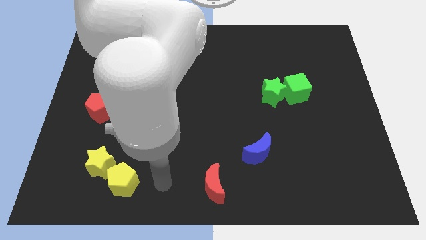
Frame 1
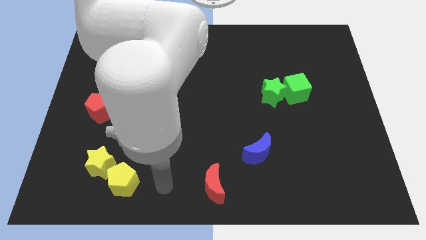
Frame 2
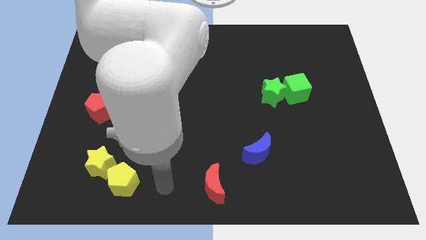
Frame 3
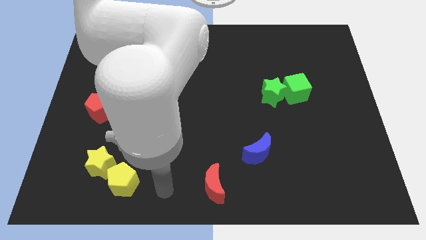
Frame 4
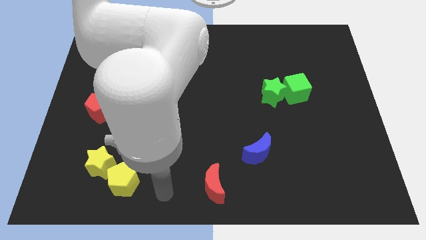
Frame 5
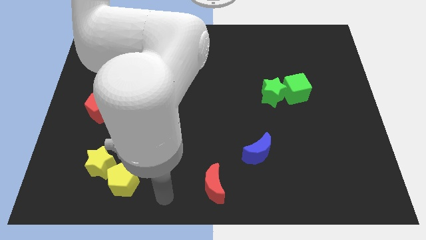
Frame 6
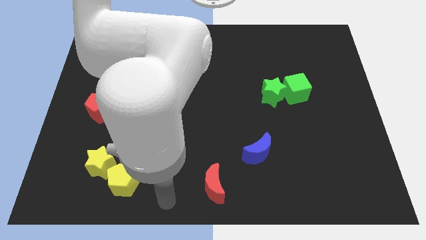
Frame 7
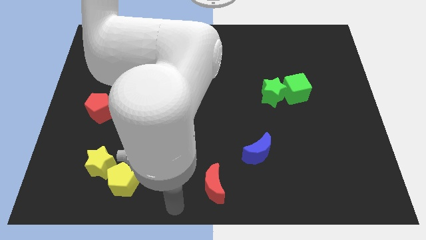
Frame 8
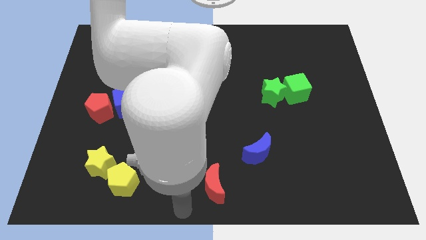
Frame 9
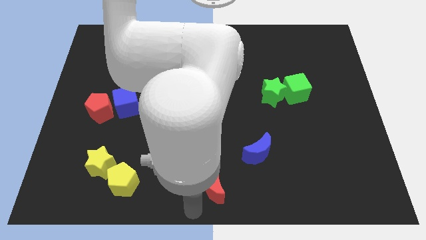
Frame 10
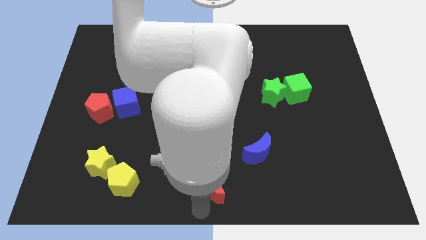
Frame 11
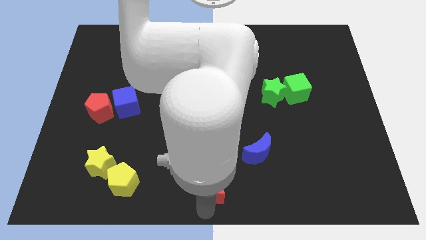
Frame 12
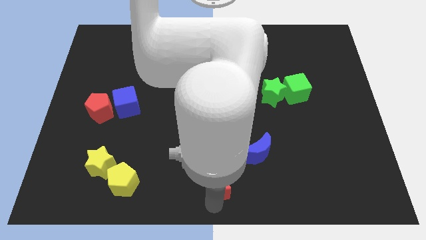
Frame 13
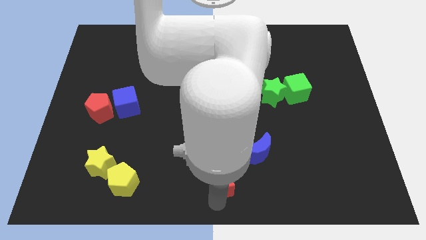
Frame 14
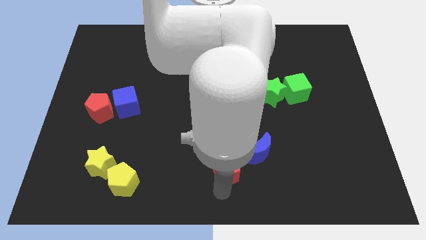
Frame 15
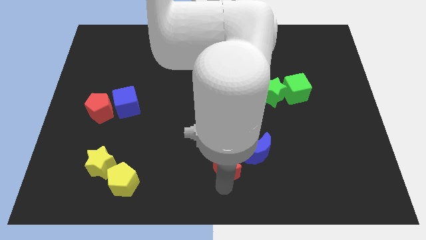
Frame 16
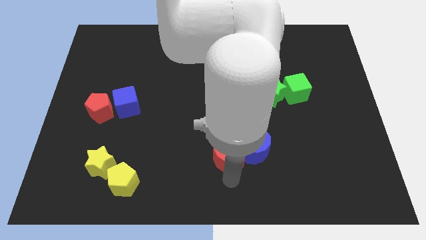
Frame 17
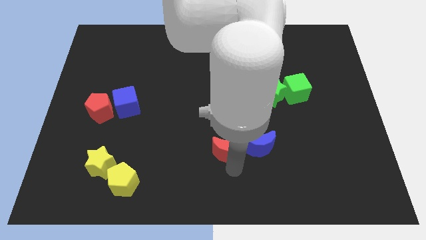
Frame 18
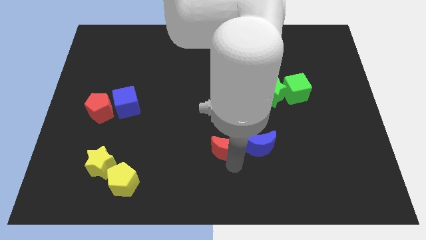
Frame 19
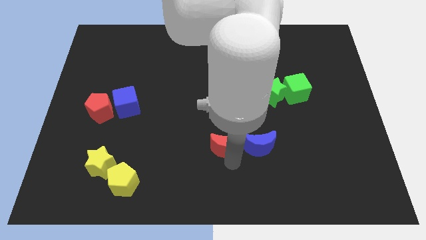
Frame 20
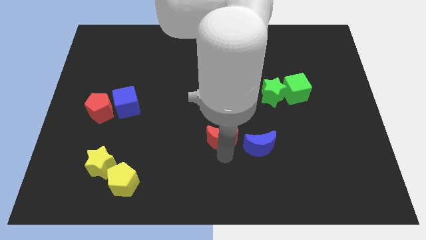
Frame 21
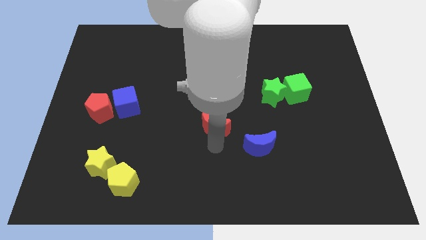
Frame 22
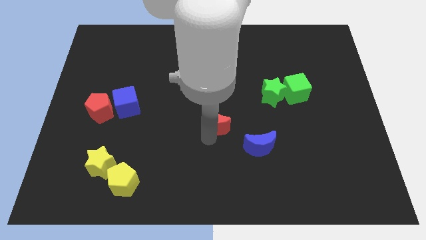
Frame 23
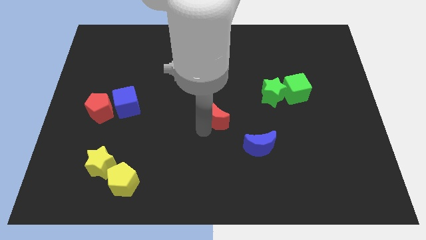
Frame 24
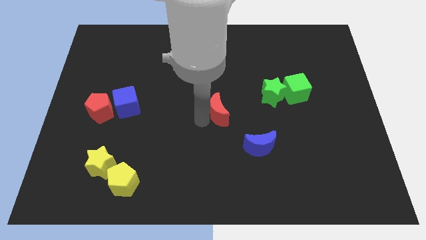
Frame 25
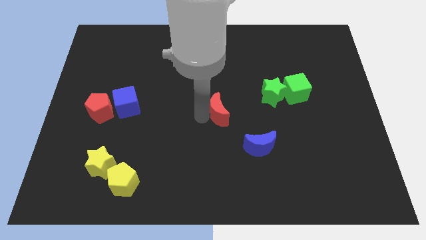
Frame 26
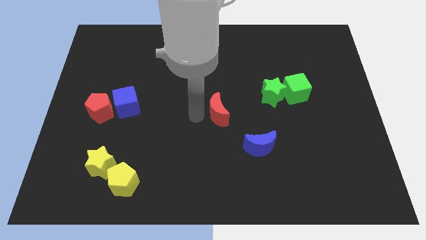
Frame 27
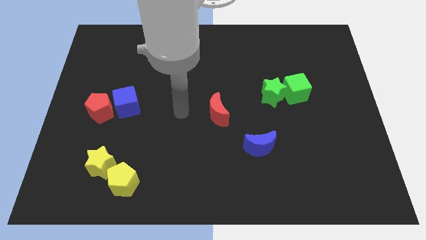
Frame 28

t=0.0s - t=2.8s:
put the red moon at the top left side of the blue moon

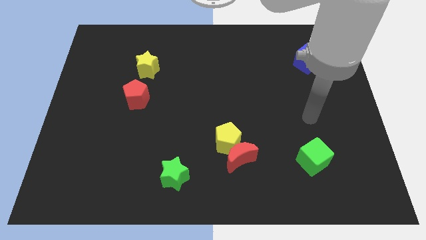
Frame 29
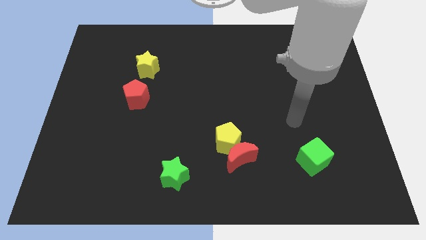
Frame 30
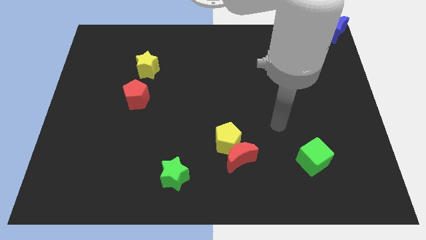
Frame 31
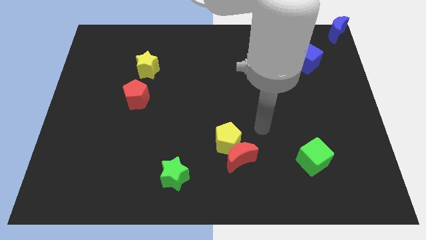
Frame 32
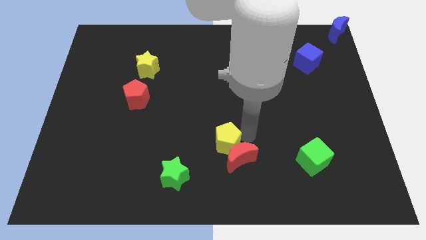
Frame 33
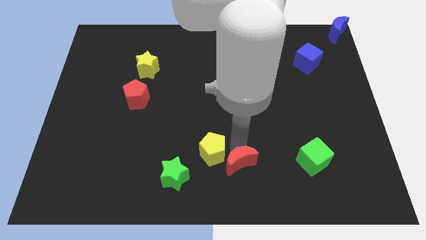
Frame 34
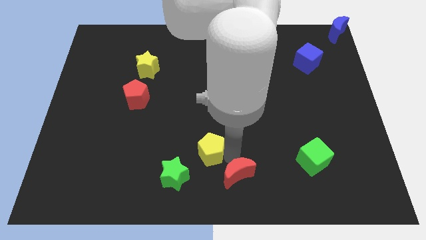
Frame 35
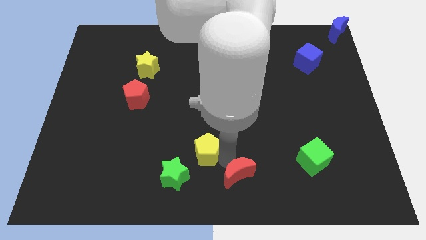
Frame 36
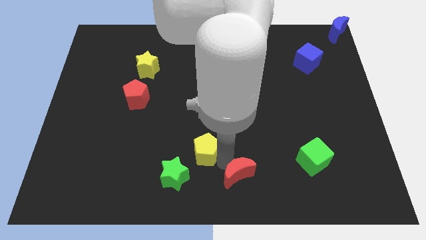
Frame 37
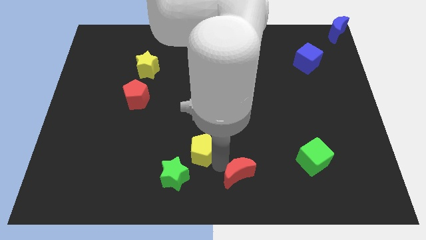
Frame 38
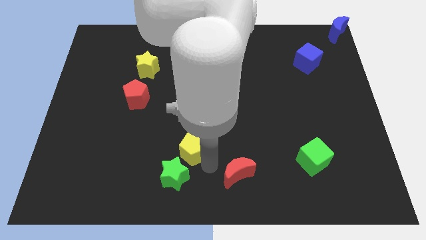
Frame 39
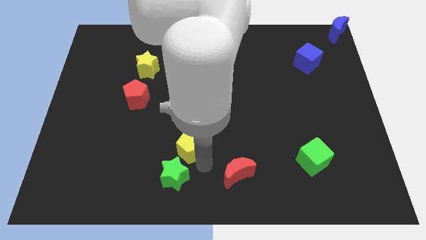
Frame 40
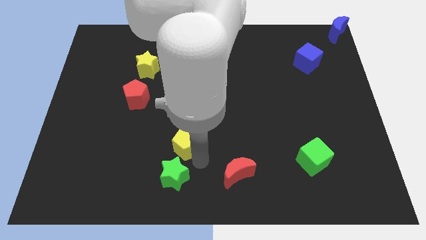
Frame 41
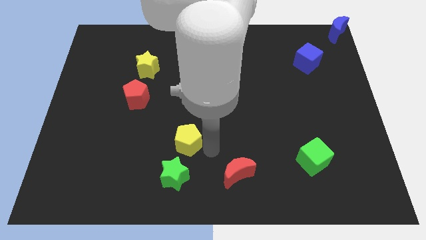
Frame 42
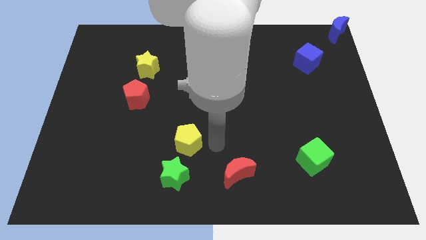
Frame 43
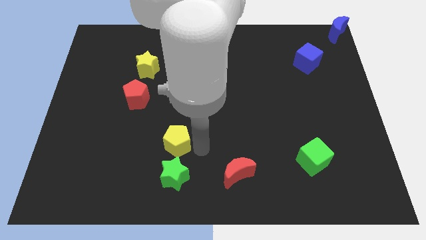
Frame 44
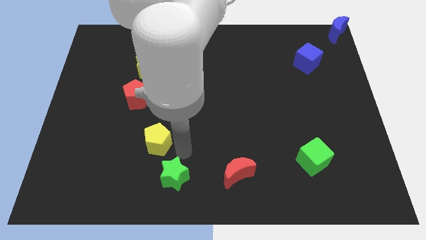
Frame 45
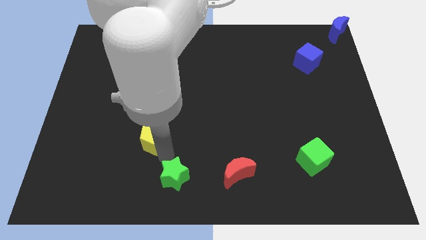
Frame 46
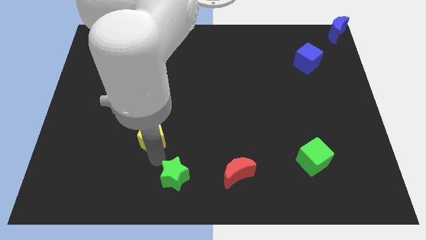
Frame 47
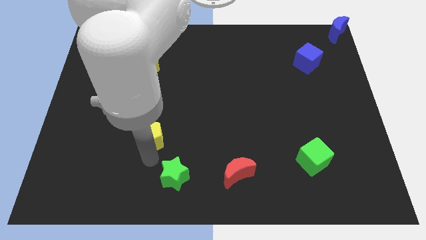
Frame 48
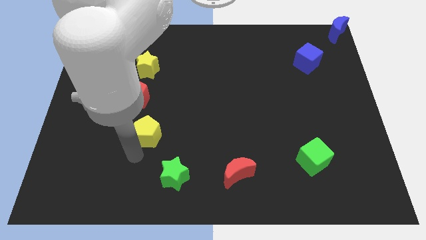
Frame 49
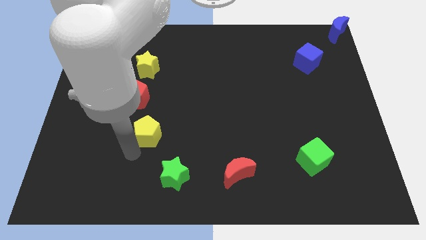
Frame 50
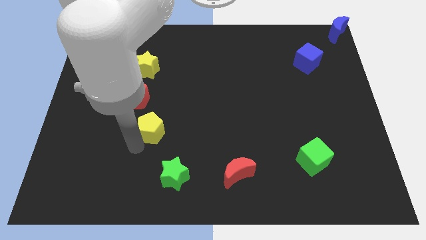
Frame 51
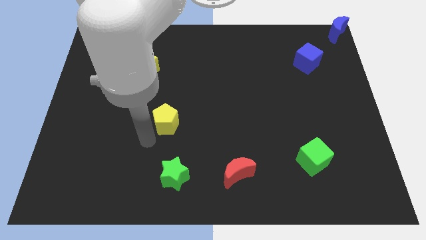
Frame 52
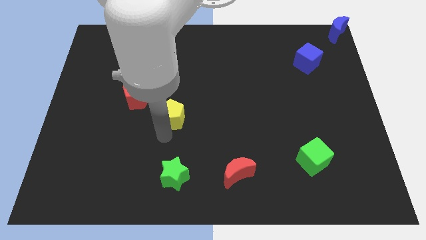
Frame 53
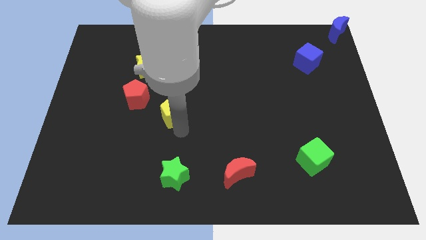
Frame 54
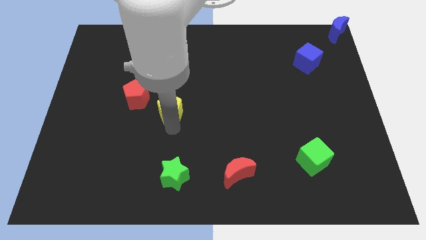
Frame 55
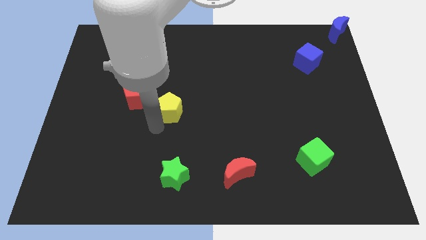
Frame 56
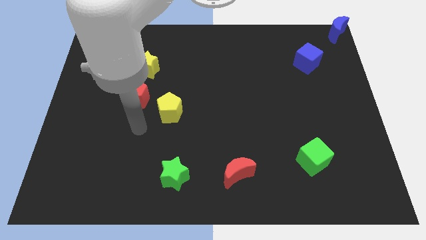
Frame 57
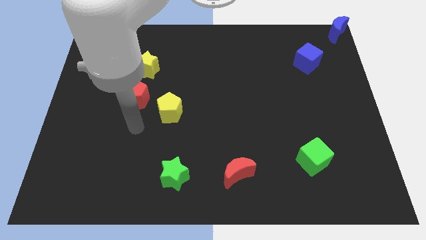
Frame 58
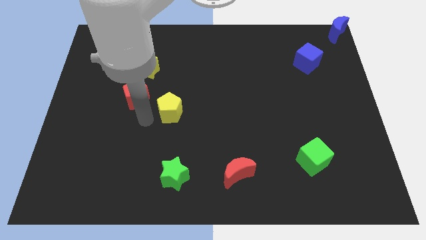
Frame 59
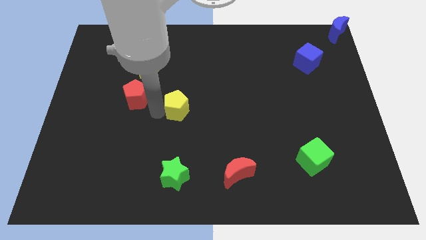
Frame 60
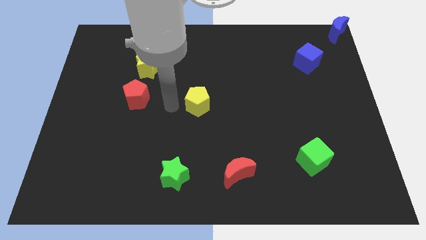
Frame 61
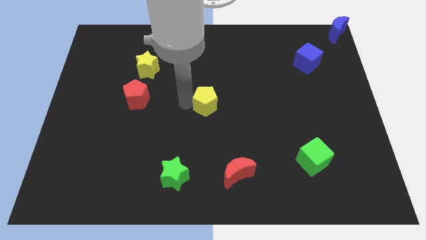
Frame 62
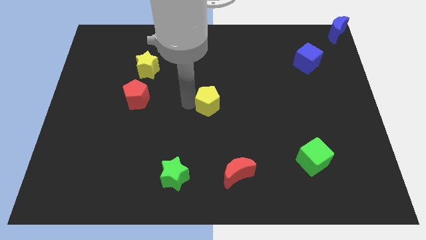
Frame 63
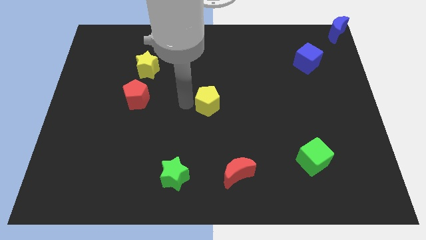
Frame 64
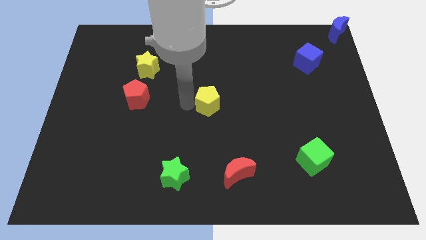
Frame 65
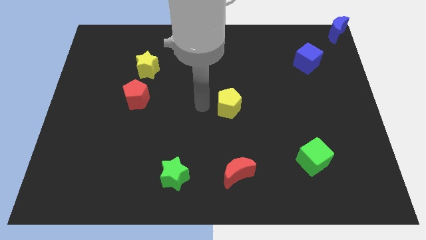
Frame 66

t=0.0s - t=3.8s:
move the yellow pentagon to the center of the board

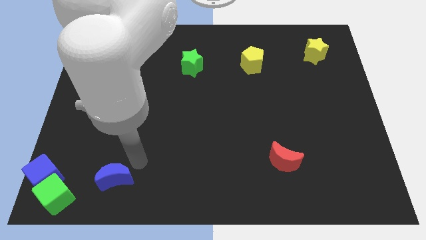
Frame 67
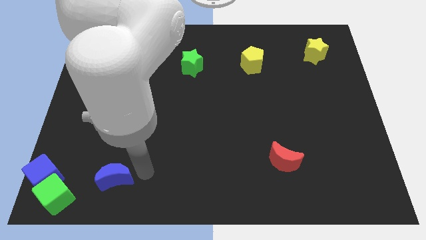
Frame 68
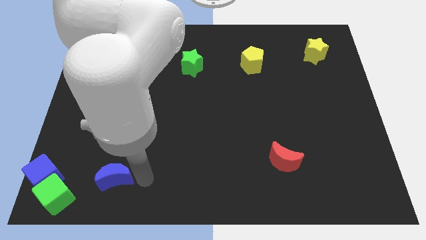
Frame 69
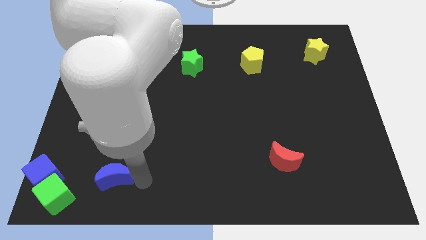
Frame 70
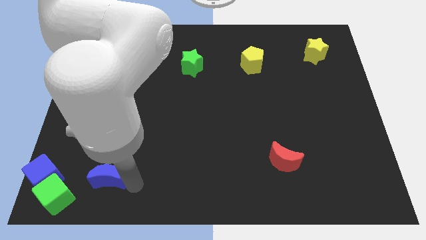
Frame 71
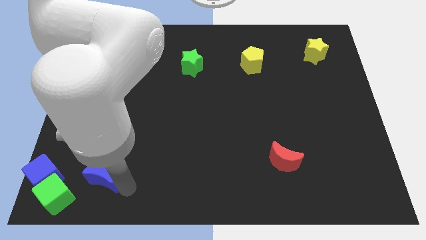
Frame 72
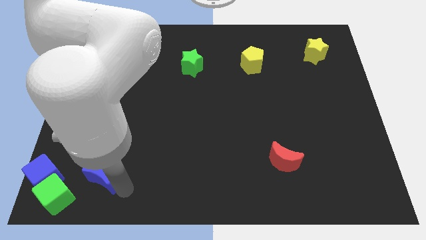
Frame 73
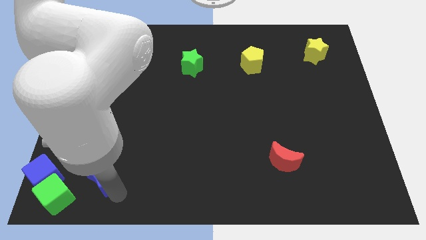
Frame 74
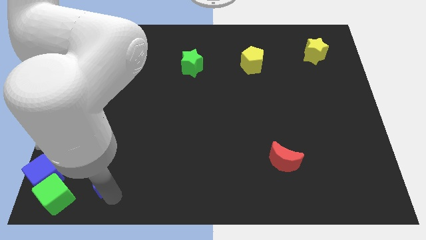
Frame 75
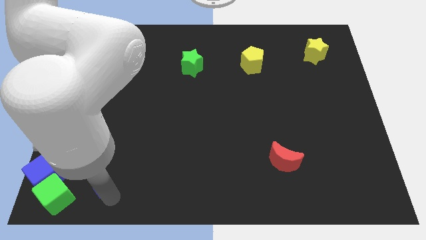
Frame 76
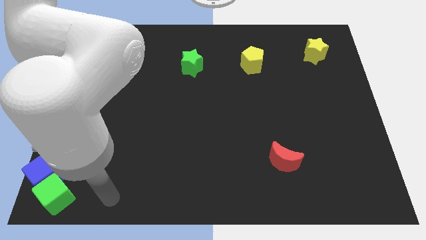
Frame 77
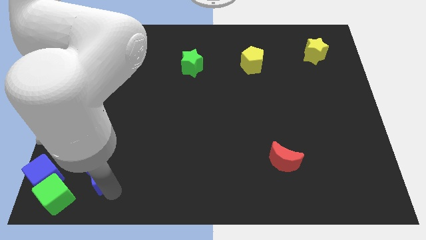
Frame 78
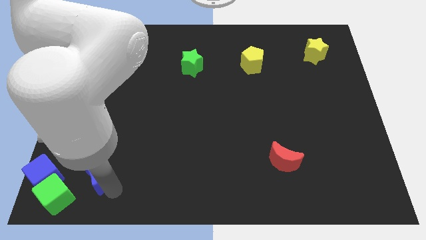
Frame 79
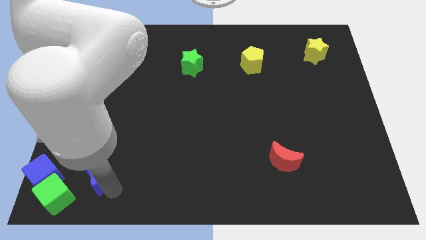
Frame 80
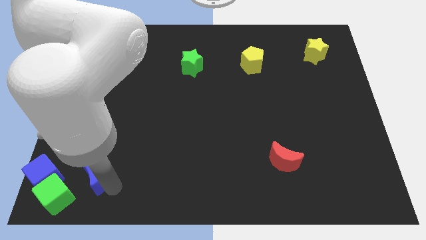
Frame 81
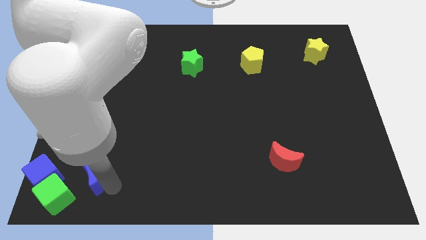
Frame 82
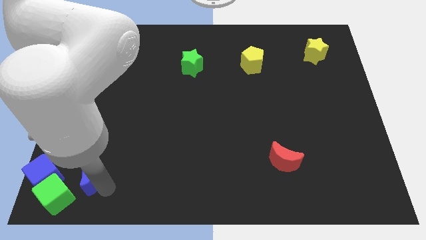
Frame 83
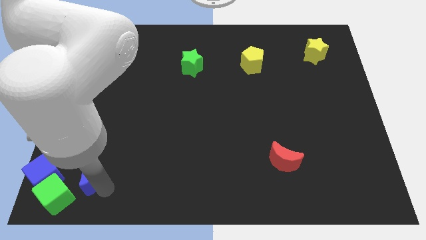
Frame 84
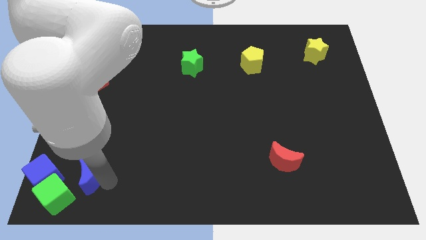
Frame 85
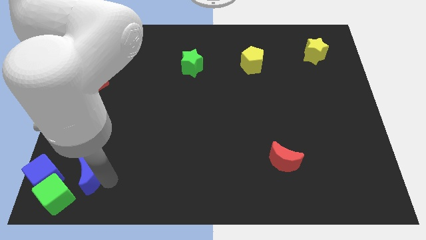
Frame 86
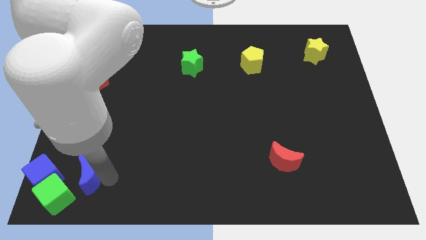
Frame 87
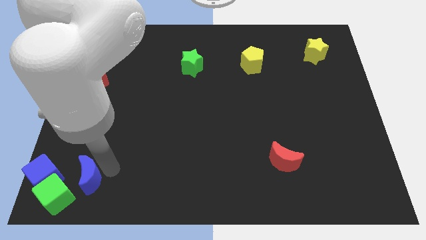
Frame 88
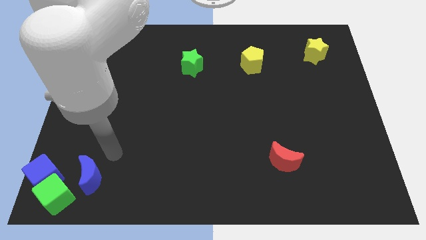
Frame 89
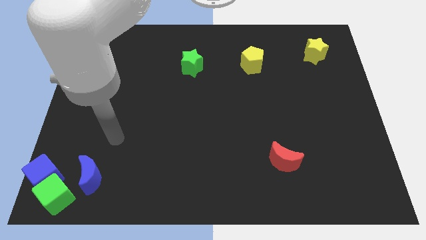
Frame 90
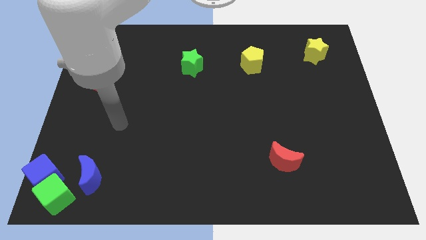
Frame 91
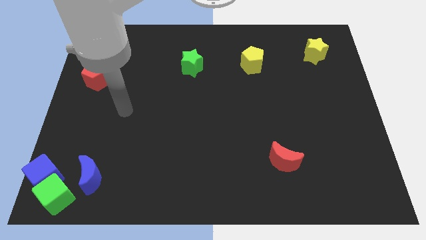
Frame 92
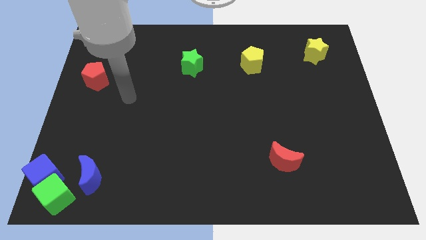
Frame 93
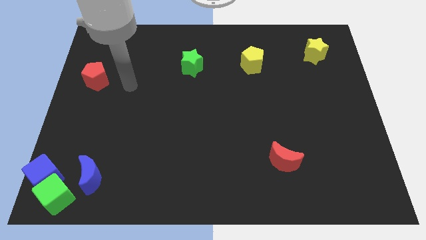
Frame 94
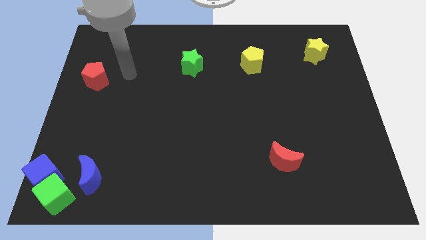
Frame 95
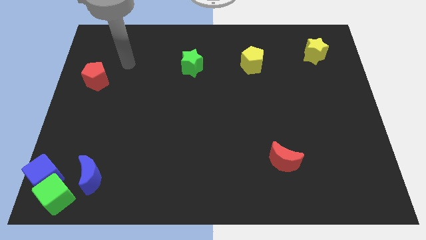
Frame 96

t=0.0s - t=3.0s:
push the blue crescent towards the left corner
